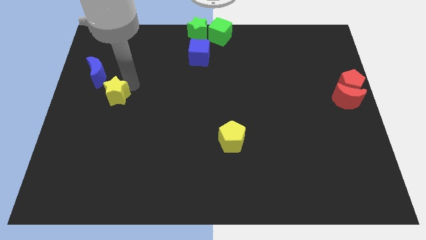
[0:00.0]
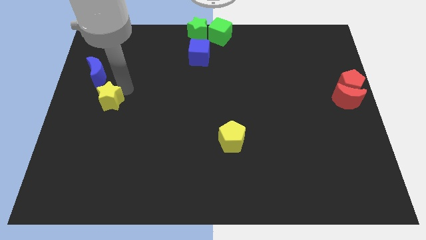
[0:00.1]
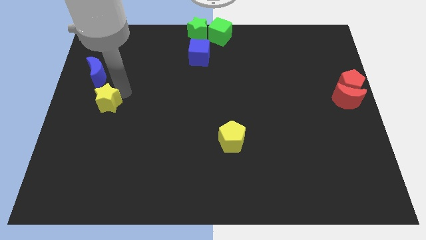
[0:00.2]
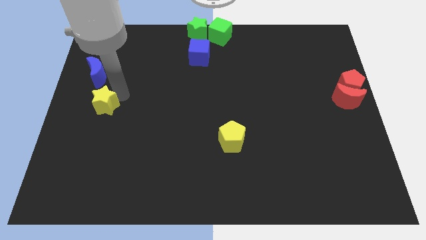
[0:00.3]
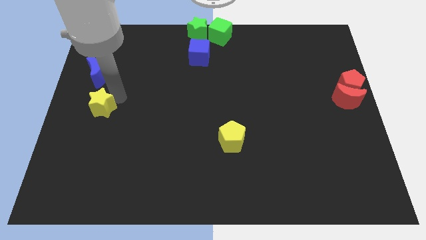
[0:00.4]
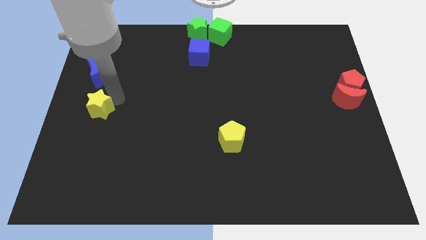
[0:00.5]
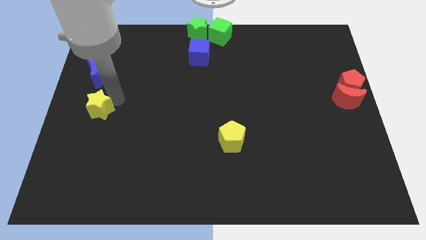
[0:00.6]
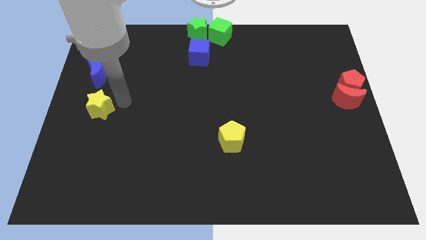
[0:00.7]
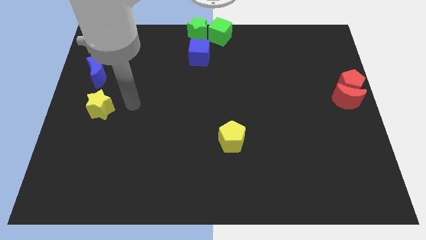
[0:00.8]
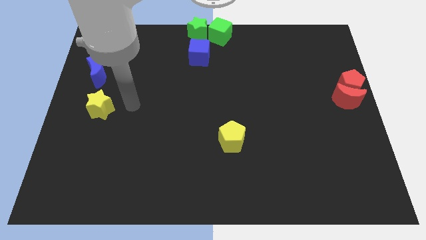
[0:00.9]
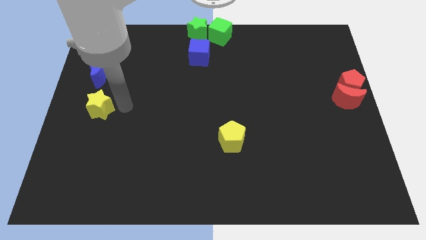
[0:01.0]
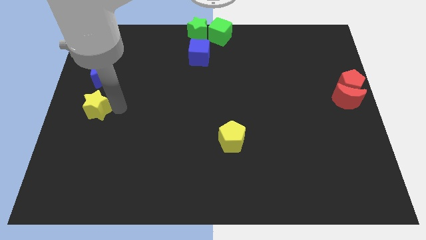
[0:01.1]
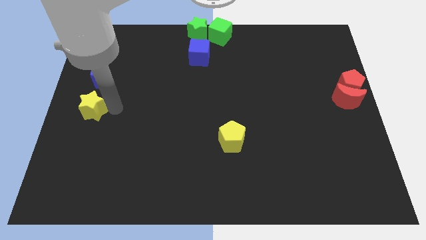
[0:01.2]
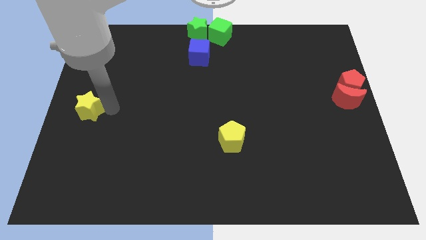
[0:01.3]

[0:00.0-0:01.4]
place the yellow star below the blue moon

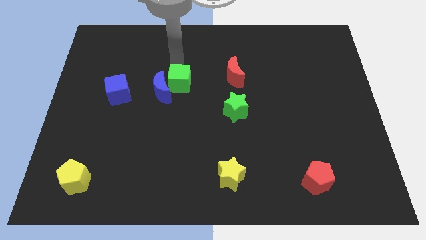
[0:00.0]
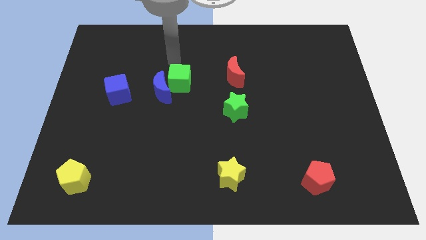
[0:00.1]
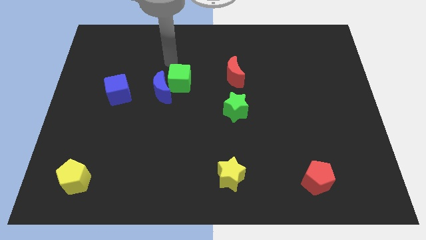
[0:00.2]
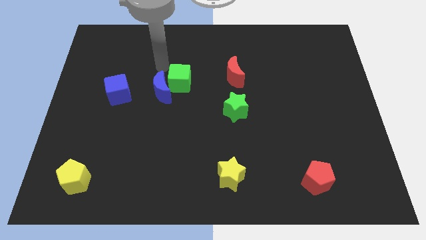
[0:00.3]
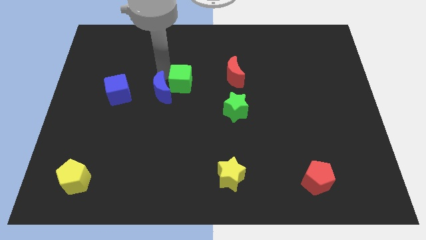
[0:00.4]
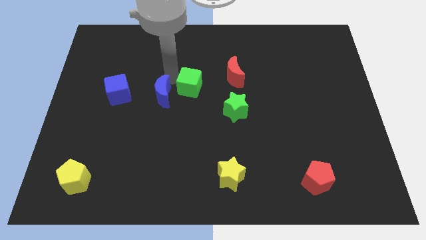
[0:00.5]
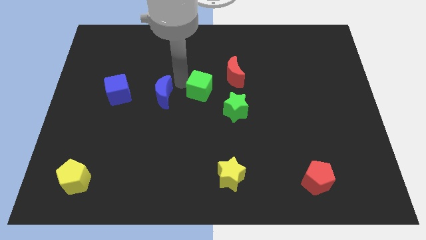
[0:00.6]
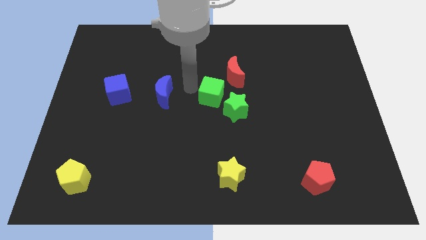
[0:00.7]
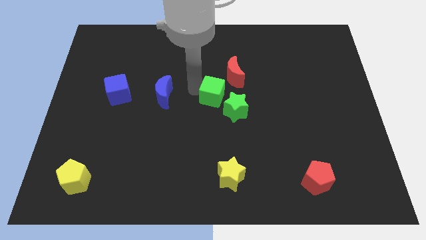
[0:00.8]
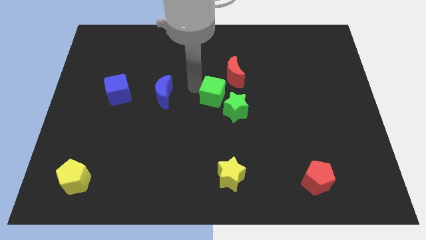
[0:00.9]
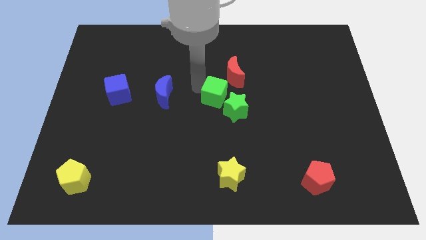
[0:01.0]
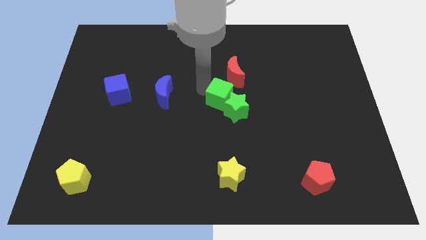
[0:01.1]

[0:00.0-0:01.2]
move green cube top left to the green star

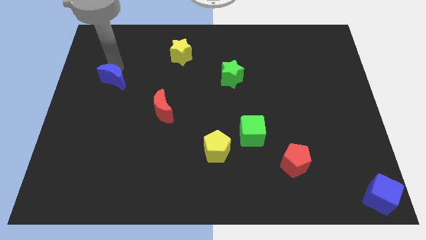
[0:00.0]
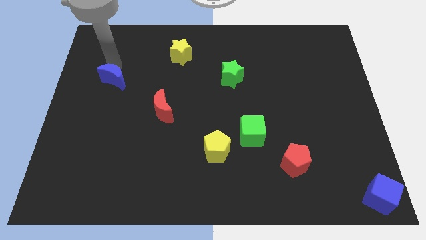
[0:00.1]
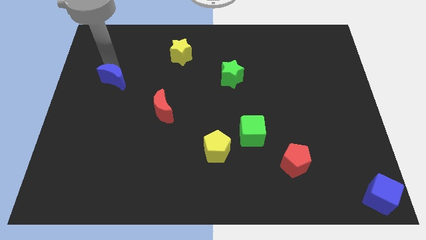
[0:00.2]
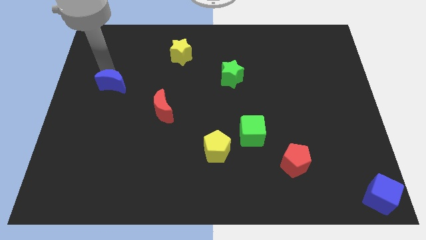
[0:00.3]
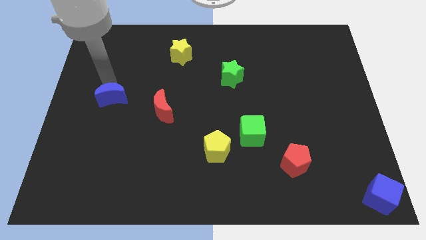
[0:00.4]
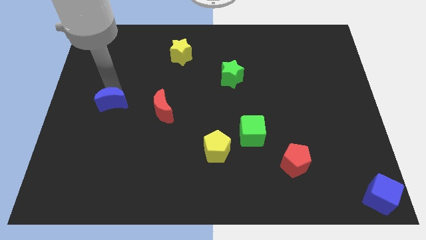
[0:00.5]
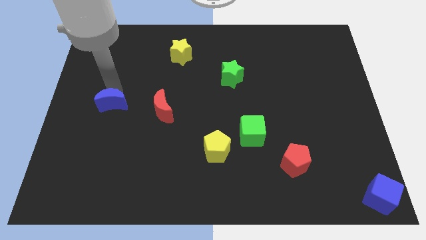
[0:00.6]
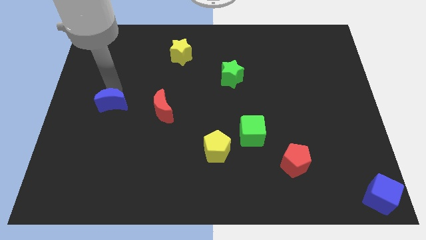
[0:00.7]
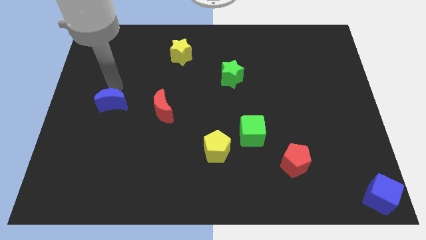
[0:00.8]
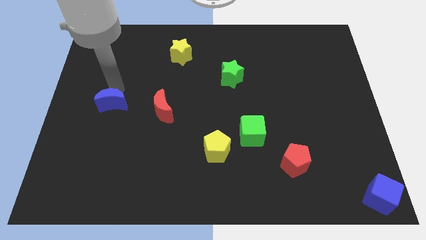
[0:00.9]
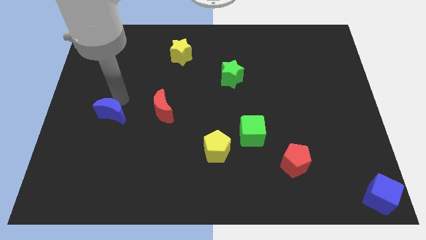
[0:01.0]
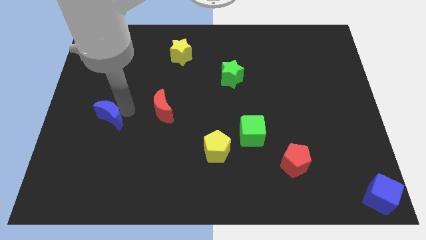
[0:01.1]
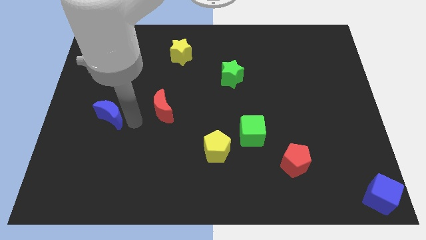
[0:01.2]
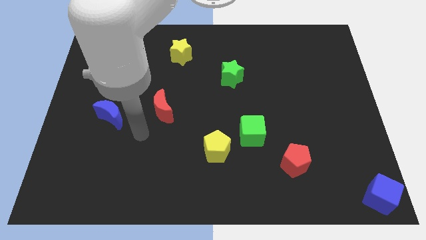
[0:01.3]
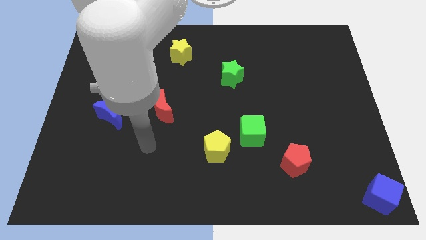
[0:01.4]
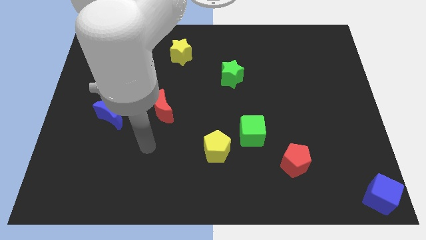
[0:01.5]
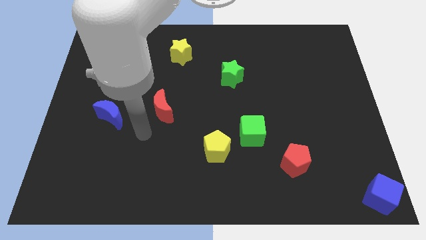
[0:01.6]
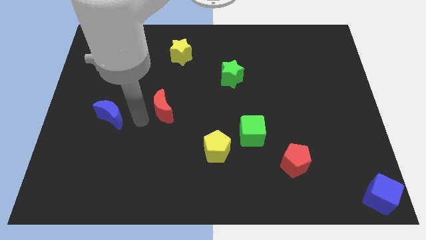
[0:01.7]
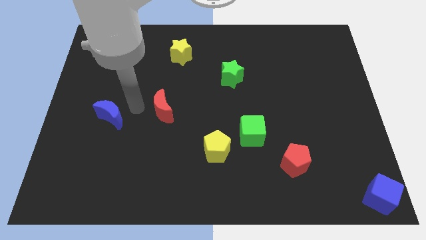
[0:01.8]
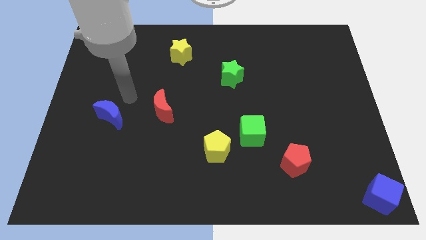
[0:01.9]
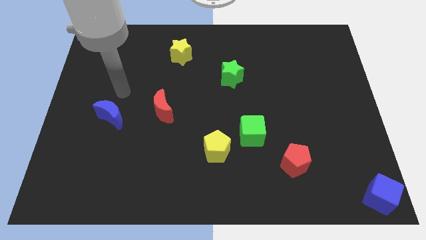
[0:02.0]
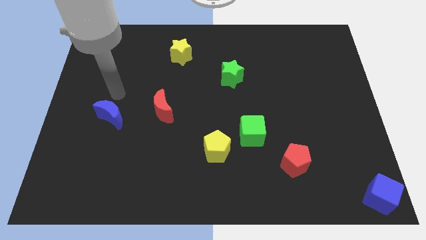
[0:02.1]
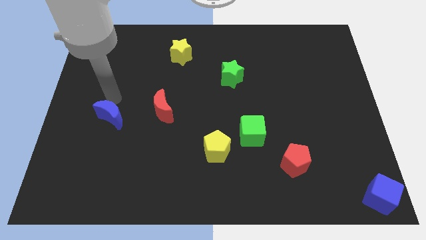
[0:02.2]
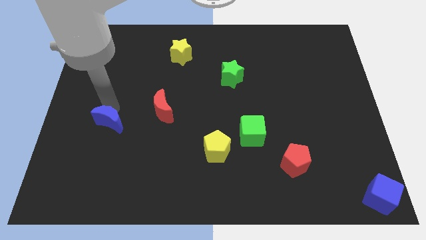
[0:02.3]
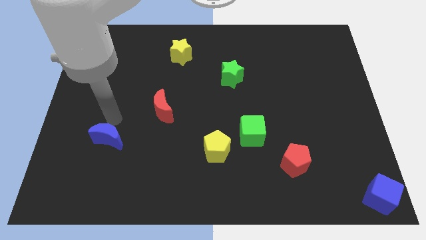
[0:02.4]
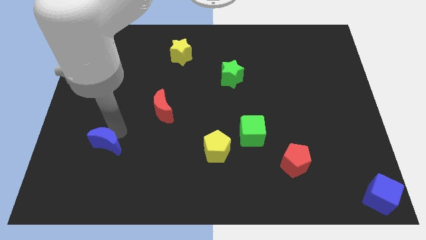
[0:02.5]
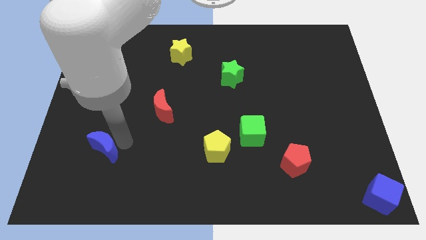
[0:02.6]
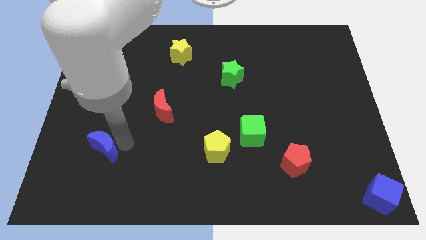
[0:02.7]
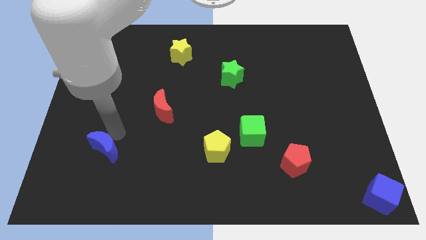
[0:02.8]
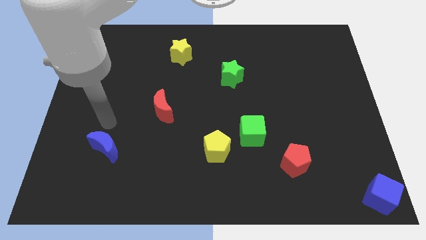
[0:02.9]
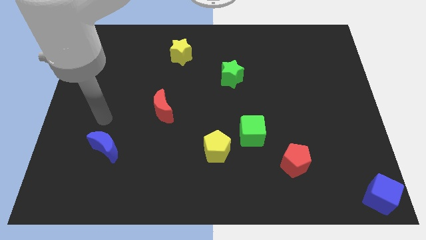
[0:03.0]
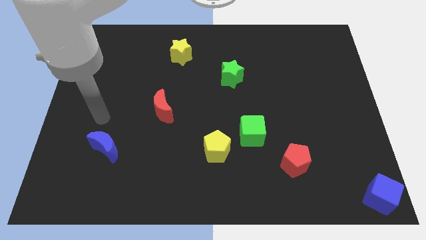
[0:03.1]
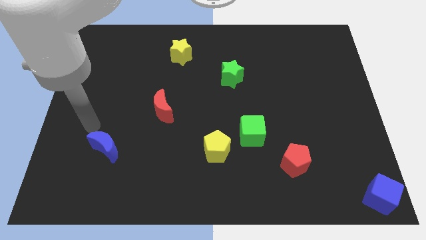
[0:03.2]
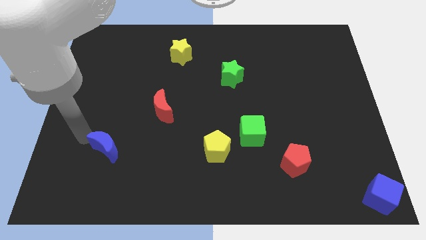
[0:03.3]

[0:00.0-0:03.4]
push the blue crescent diagonally to red crescent

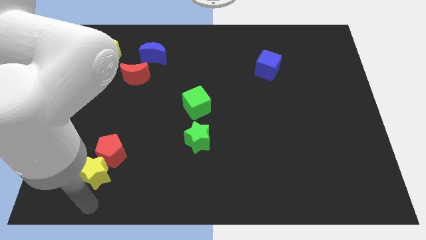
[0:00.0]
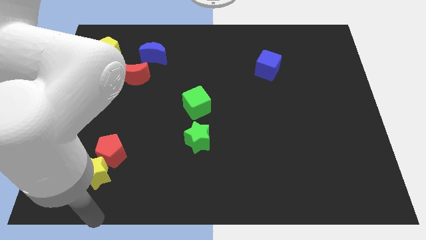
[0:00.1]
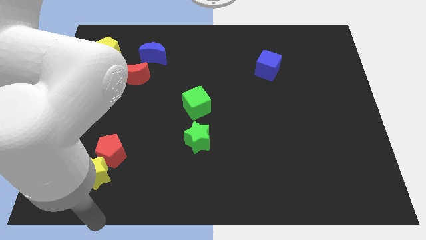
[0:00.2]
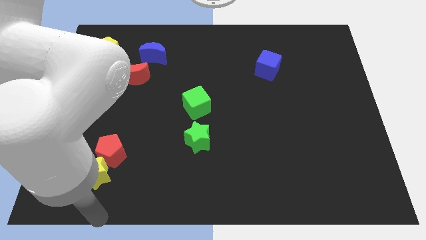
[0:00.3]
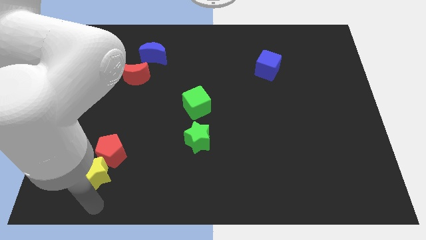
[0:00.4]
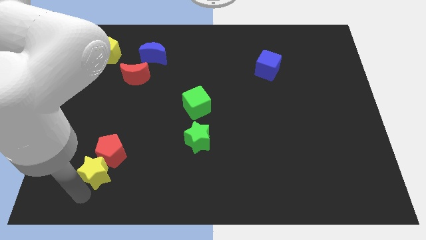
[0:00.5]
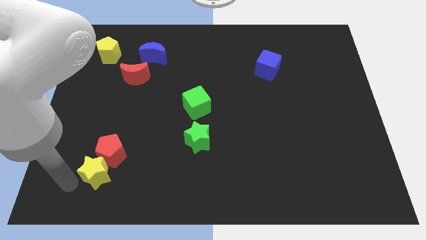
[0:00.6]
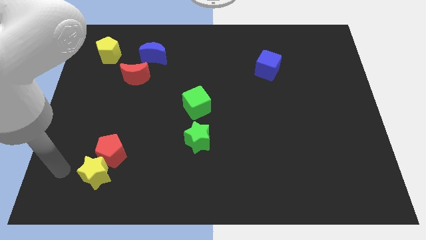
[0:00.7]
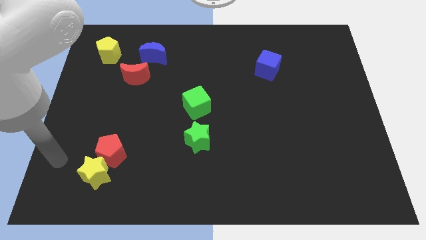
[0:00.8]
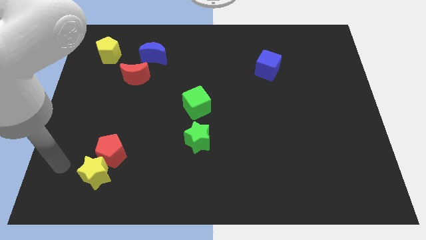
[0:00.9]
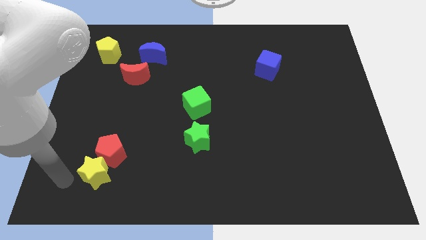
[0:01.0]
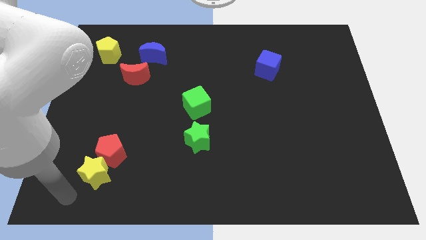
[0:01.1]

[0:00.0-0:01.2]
place the arm at the left side of the yellow star

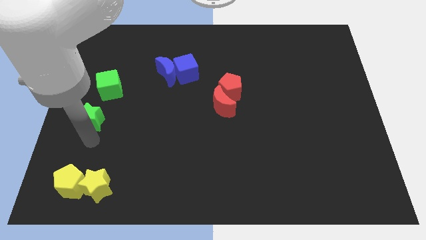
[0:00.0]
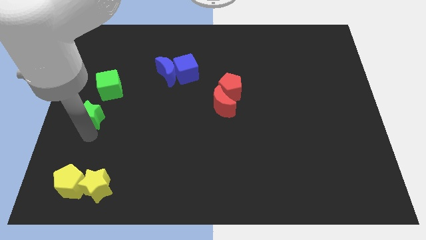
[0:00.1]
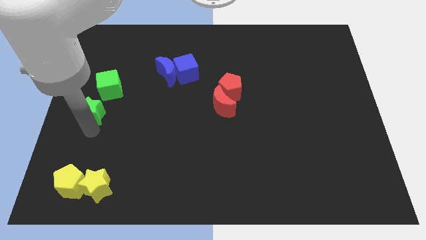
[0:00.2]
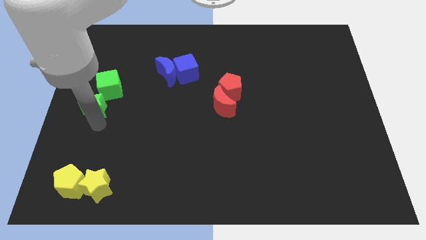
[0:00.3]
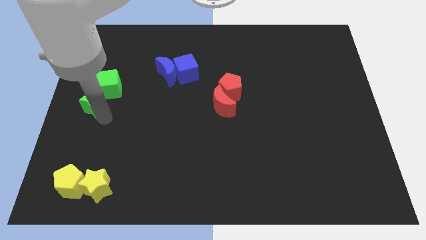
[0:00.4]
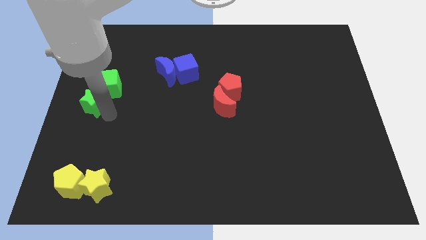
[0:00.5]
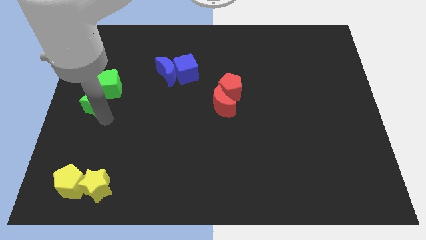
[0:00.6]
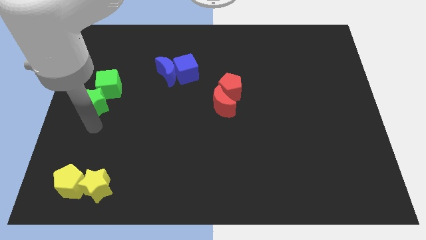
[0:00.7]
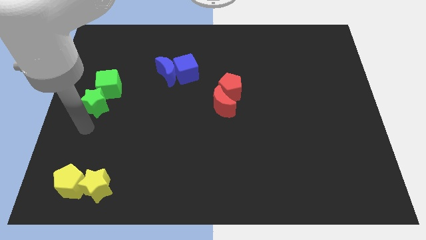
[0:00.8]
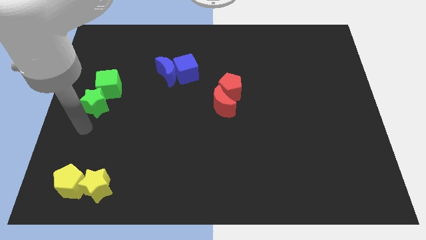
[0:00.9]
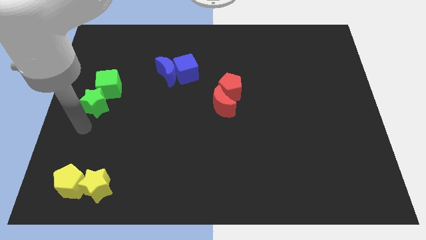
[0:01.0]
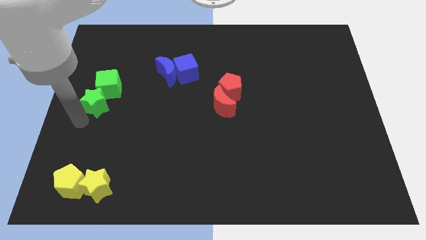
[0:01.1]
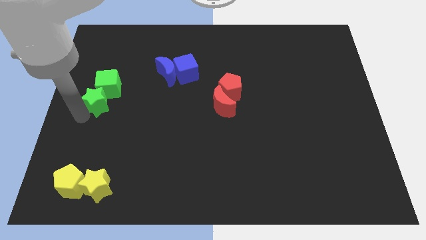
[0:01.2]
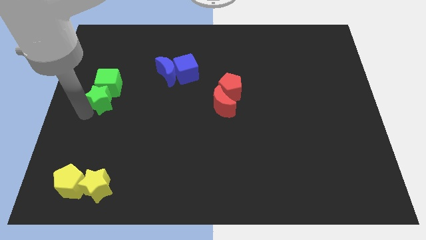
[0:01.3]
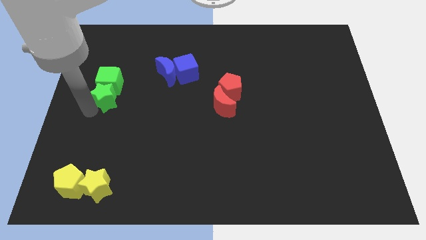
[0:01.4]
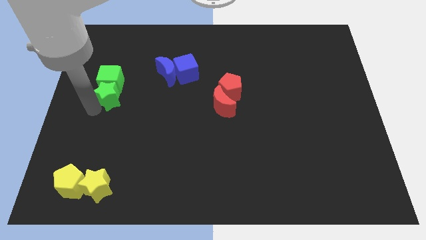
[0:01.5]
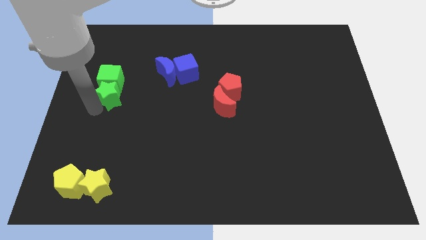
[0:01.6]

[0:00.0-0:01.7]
move the green cube with green star
